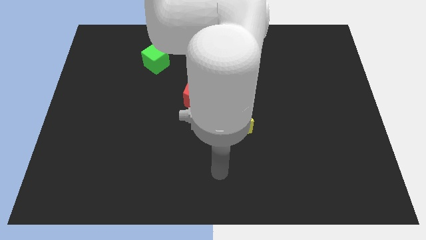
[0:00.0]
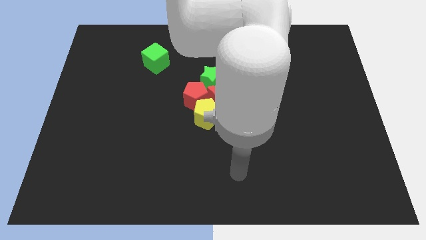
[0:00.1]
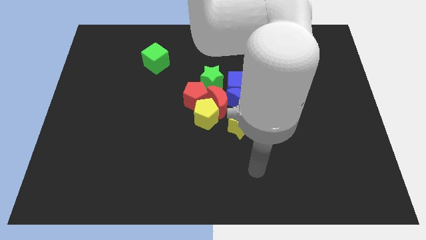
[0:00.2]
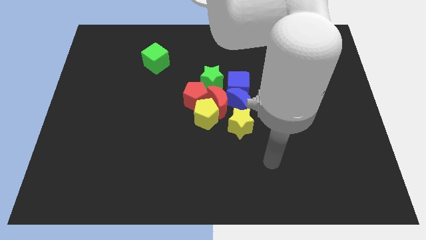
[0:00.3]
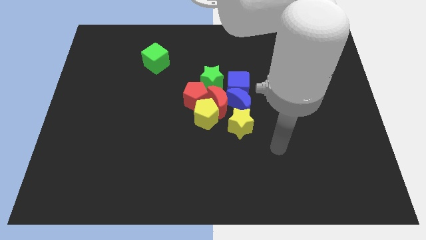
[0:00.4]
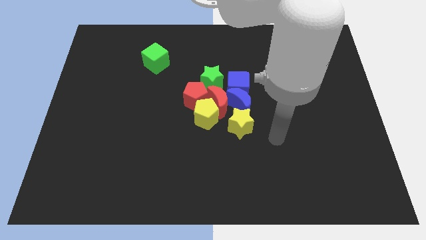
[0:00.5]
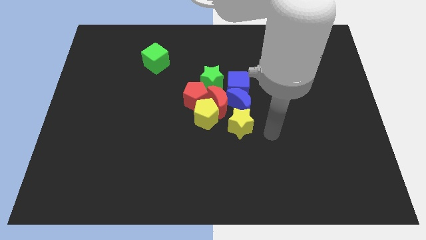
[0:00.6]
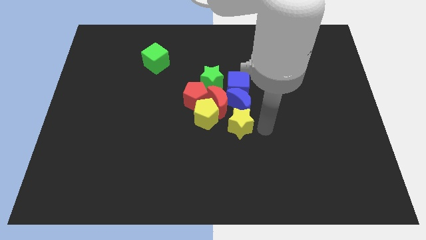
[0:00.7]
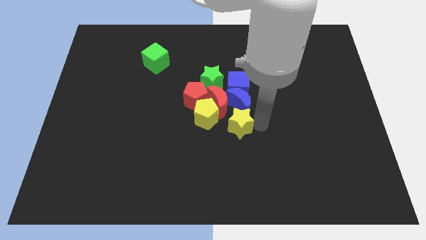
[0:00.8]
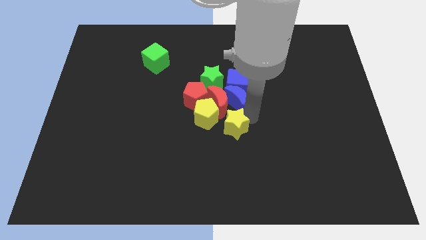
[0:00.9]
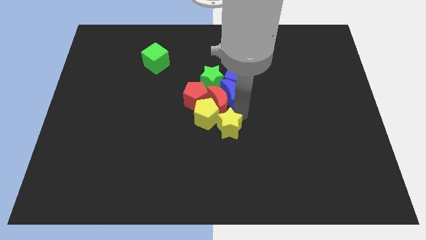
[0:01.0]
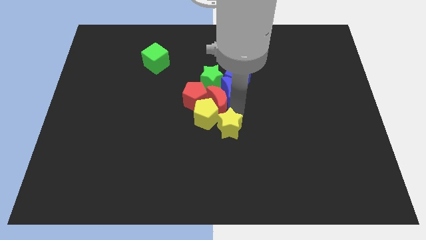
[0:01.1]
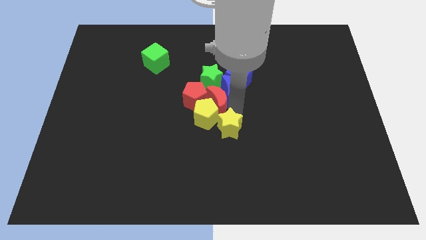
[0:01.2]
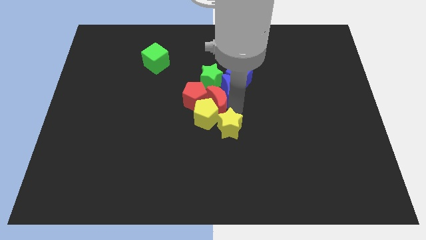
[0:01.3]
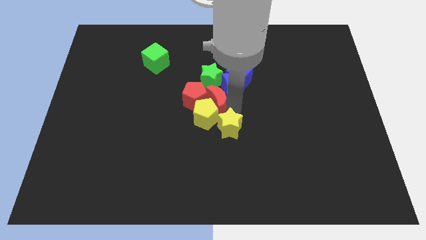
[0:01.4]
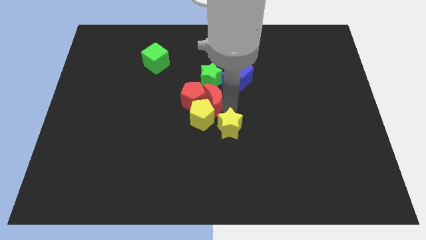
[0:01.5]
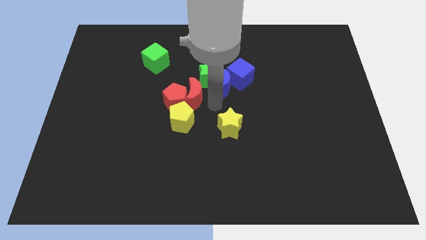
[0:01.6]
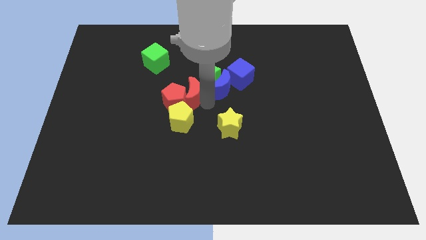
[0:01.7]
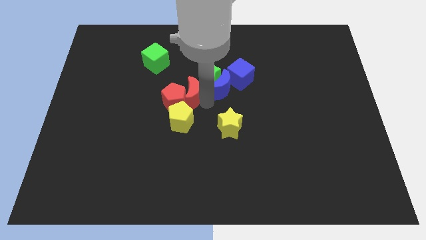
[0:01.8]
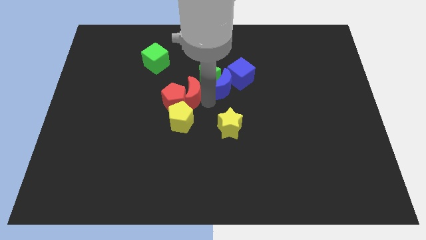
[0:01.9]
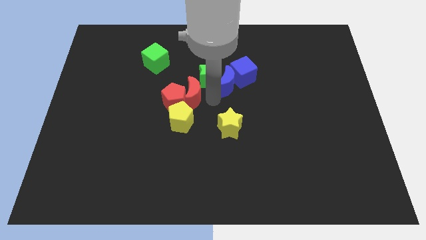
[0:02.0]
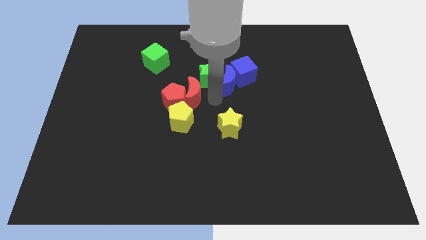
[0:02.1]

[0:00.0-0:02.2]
separate the yellow star from the group of blocks

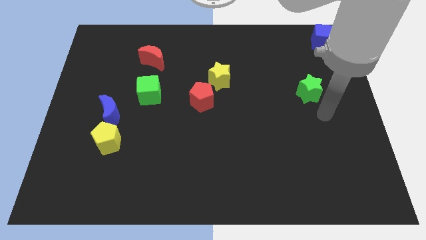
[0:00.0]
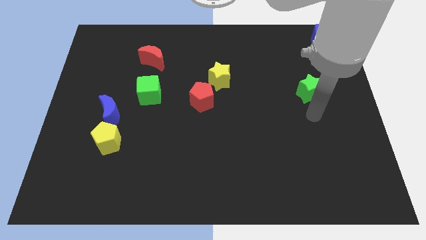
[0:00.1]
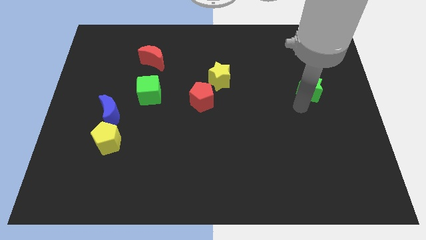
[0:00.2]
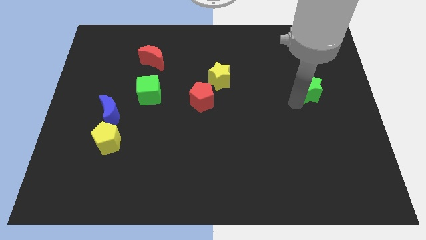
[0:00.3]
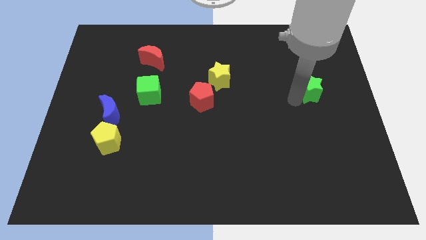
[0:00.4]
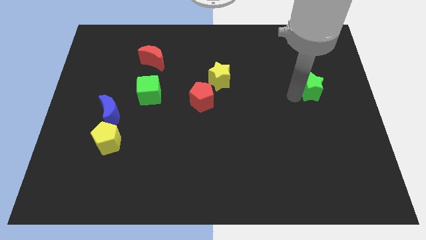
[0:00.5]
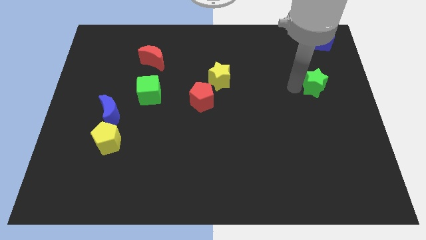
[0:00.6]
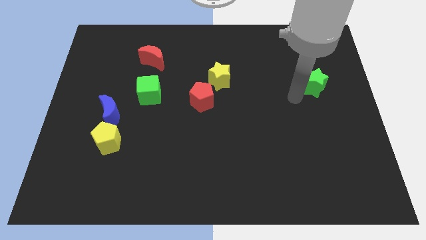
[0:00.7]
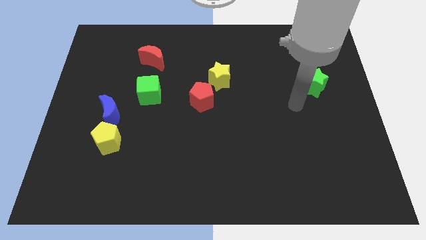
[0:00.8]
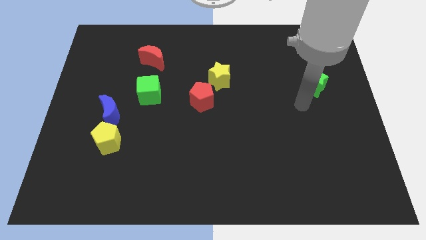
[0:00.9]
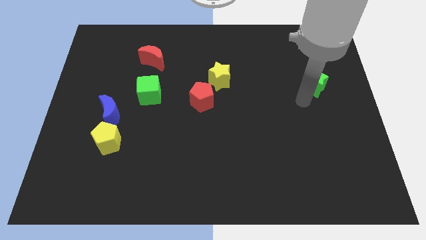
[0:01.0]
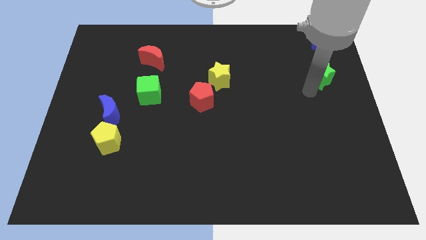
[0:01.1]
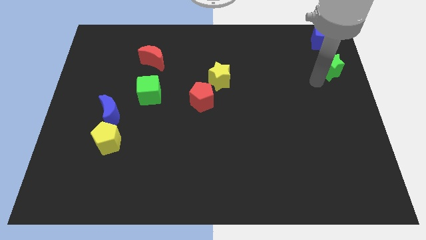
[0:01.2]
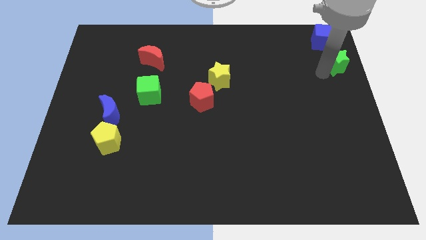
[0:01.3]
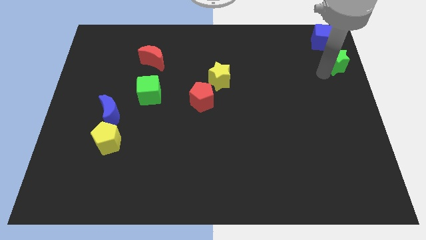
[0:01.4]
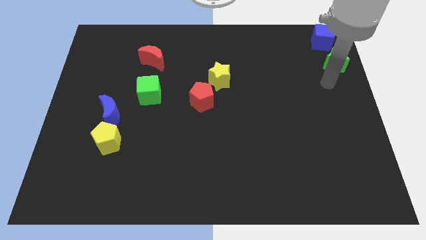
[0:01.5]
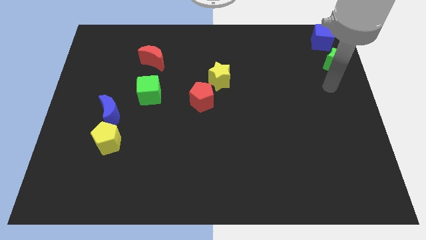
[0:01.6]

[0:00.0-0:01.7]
place the green star below the blue cube

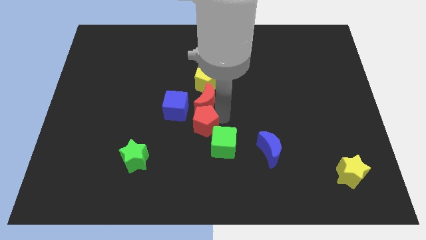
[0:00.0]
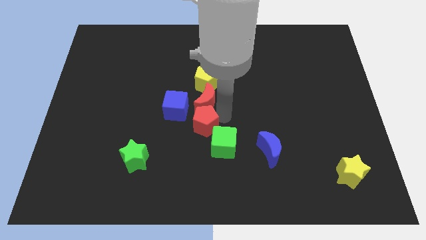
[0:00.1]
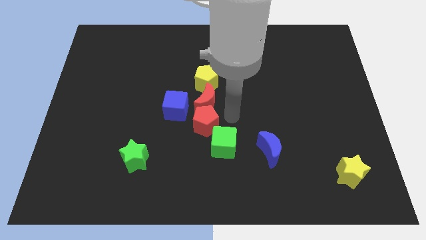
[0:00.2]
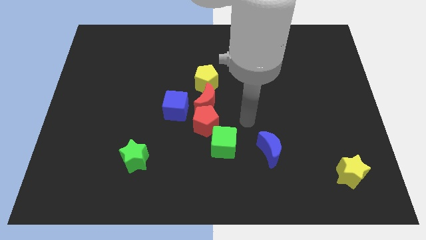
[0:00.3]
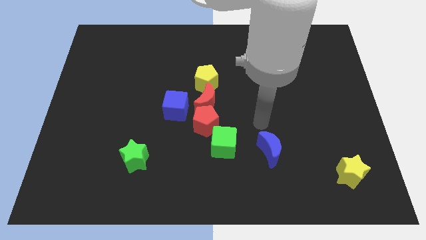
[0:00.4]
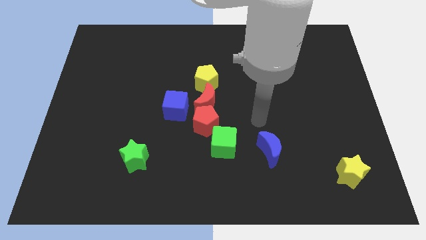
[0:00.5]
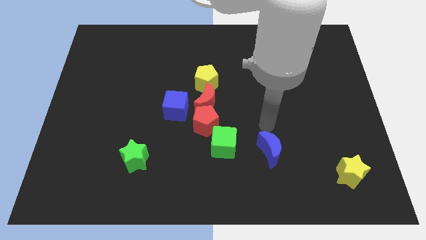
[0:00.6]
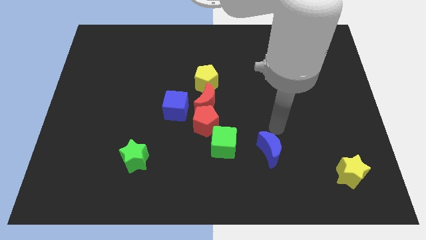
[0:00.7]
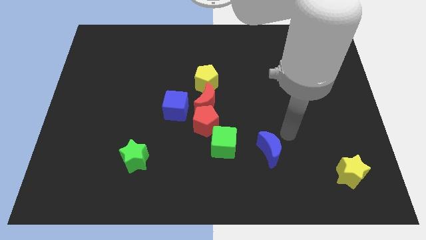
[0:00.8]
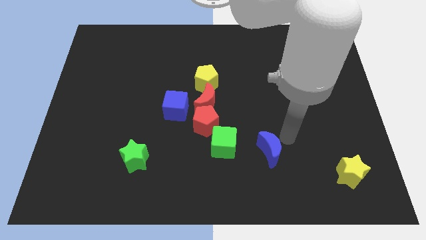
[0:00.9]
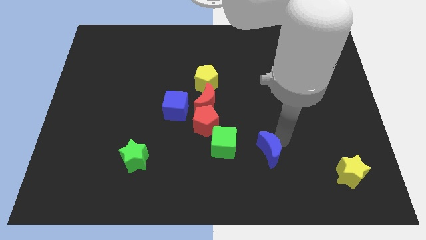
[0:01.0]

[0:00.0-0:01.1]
move your arm away from red pentagon

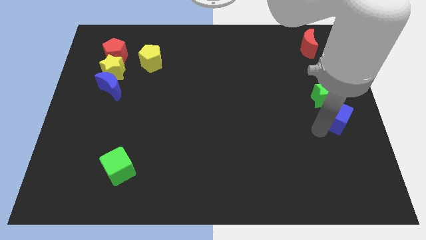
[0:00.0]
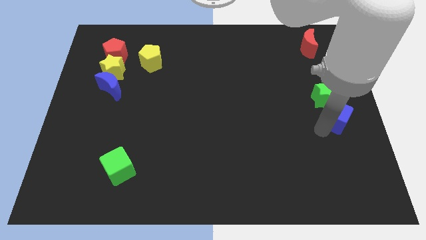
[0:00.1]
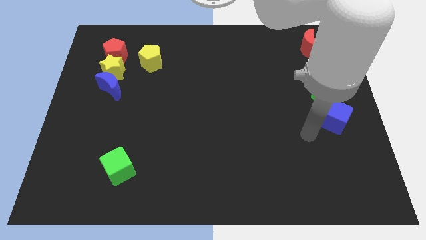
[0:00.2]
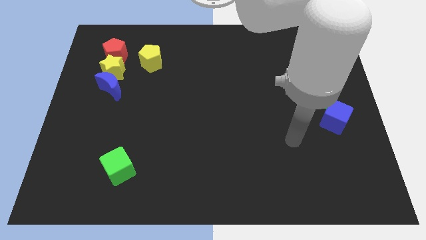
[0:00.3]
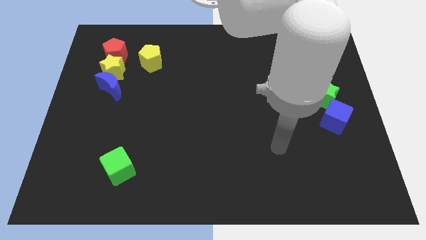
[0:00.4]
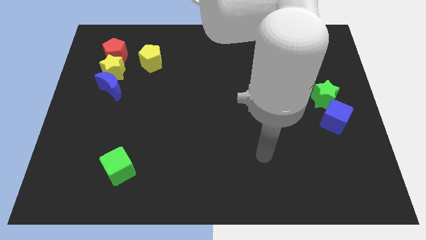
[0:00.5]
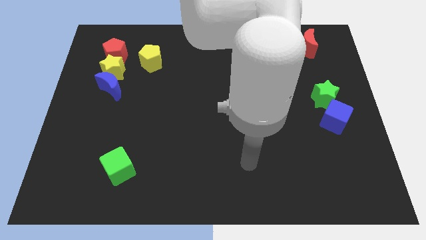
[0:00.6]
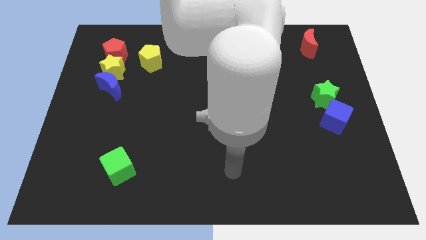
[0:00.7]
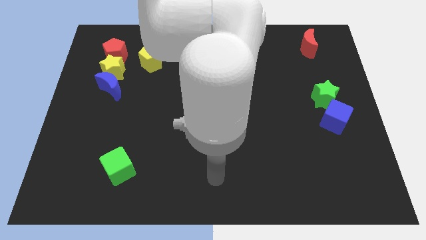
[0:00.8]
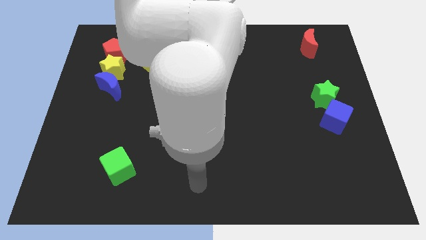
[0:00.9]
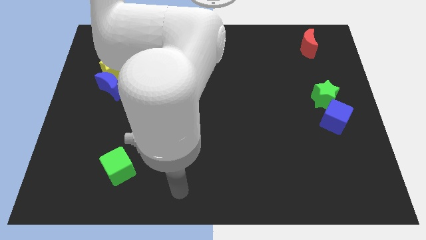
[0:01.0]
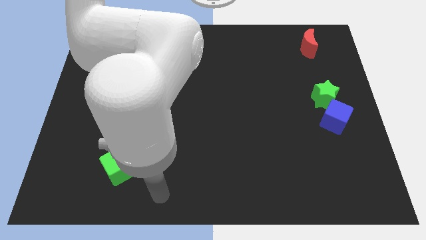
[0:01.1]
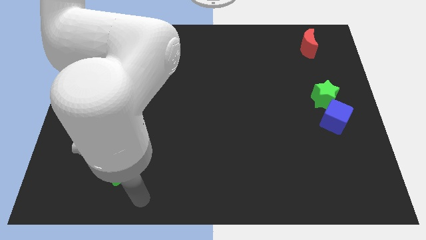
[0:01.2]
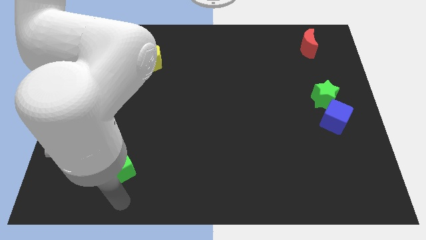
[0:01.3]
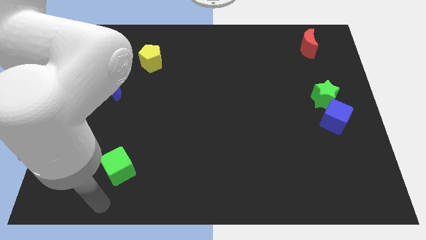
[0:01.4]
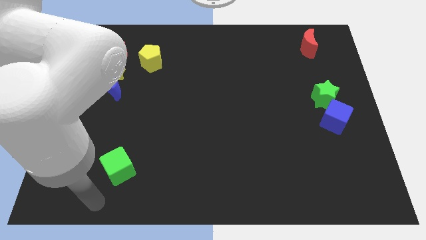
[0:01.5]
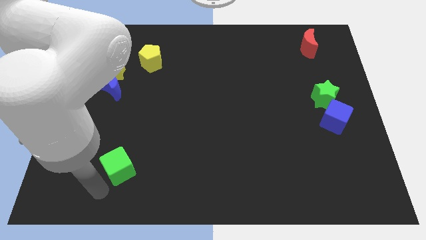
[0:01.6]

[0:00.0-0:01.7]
move your arm away from the blue crescent

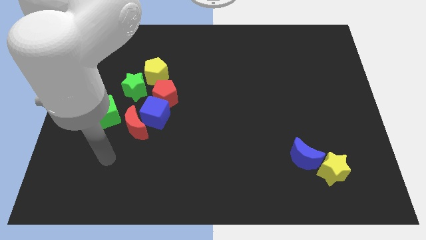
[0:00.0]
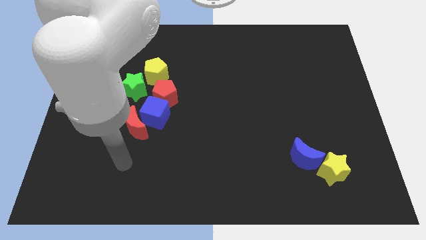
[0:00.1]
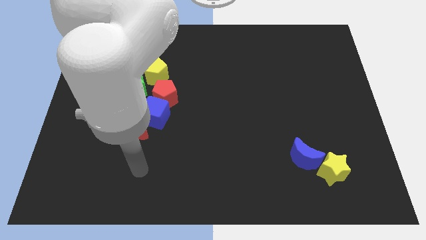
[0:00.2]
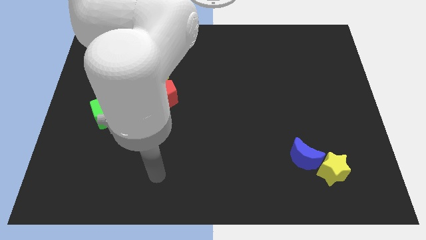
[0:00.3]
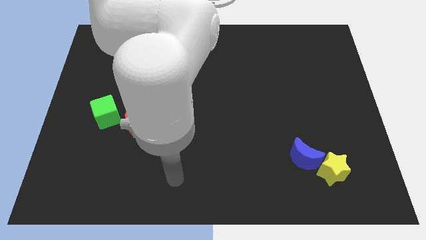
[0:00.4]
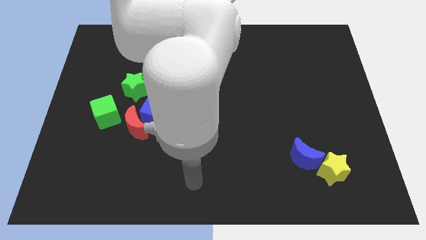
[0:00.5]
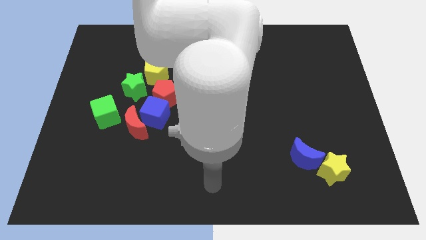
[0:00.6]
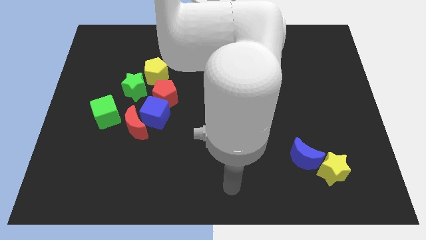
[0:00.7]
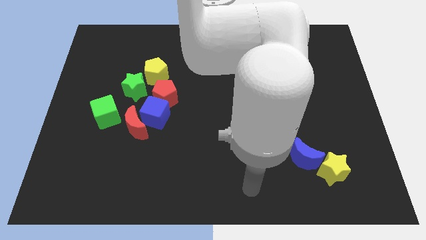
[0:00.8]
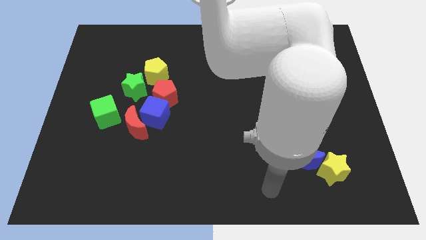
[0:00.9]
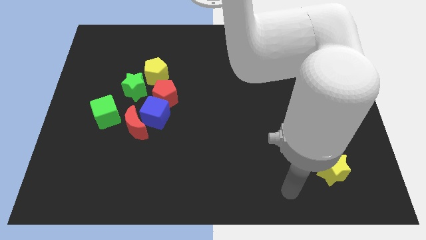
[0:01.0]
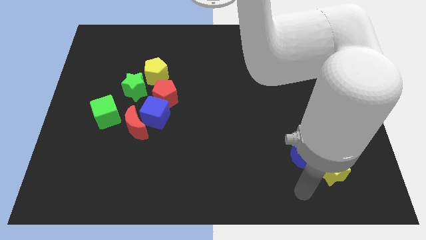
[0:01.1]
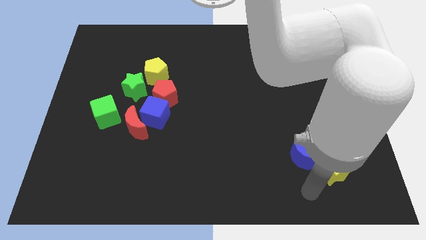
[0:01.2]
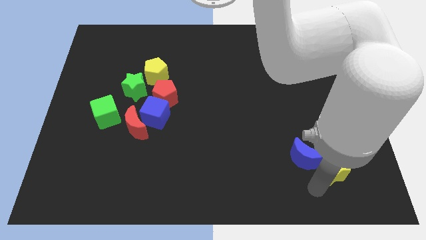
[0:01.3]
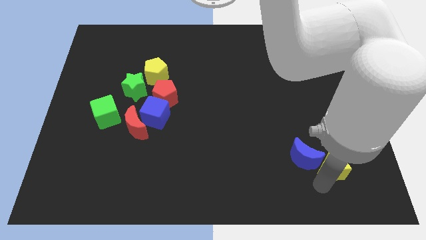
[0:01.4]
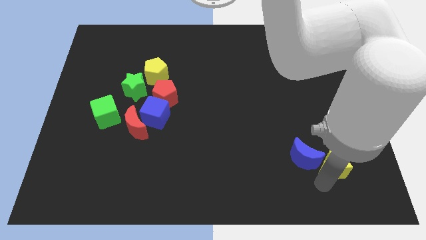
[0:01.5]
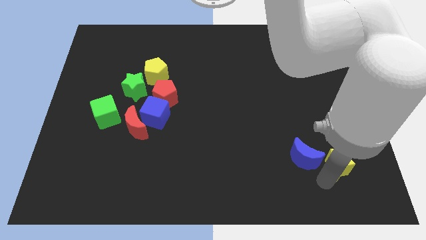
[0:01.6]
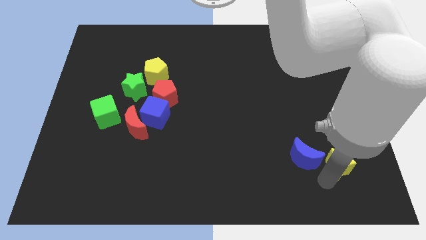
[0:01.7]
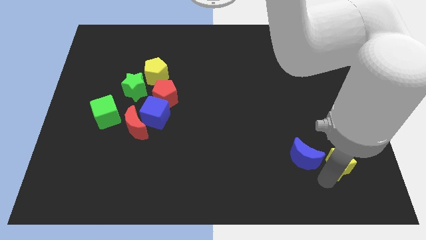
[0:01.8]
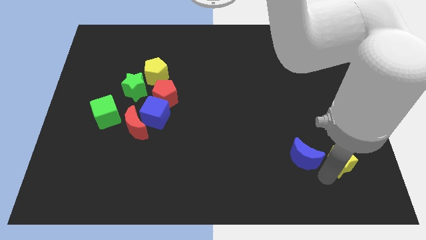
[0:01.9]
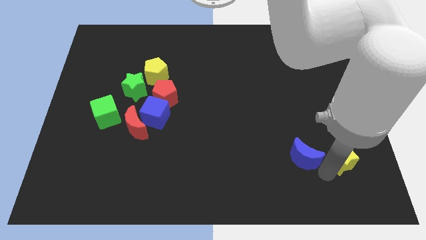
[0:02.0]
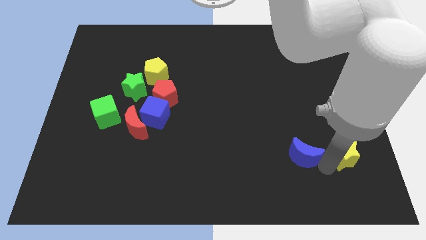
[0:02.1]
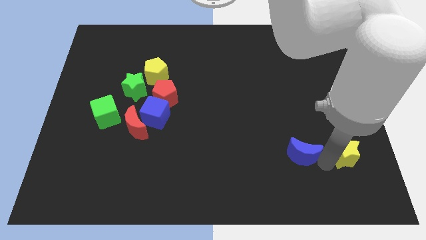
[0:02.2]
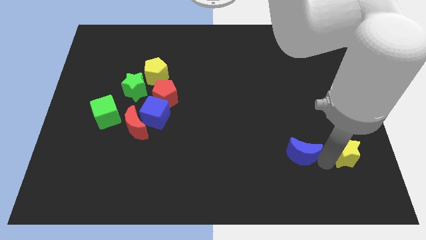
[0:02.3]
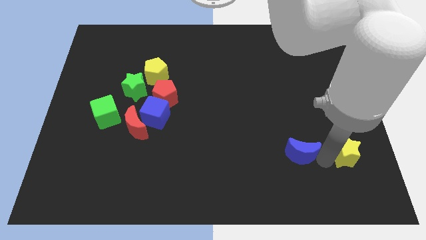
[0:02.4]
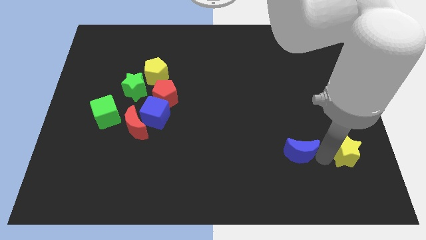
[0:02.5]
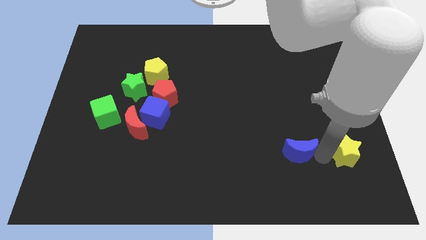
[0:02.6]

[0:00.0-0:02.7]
place yellow star to the right of blue moon
